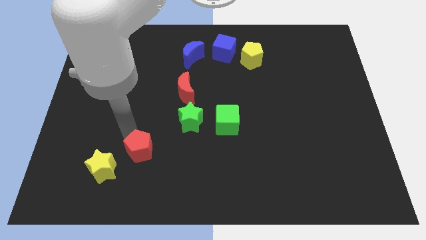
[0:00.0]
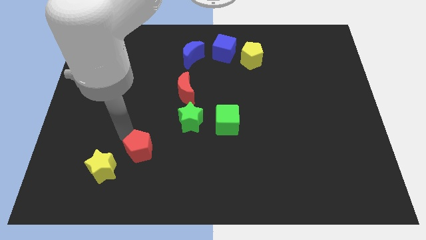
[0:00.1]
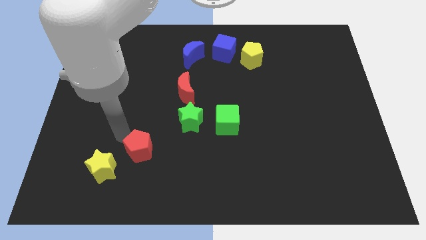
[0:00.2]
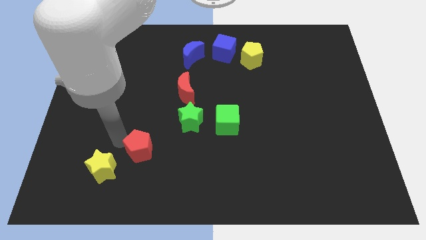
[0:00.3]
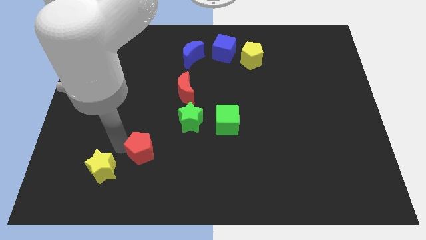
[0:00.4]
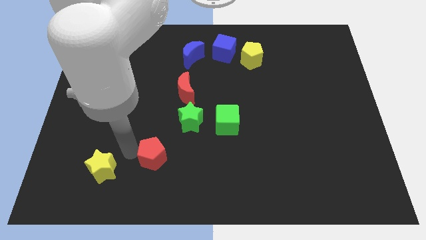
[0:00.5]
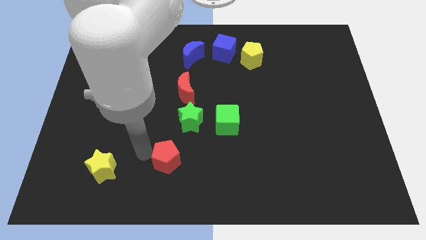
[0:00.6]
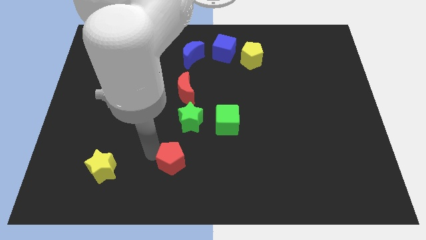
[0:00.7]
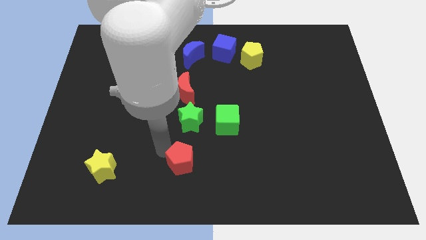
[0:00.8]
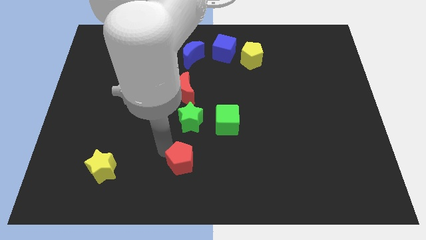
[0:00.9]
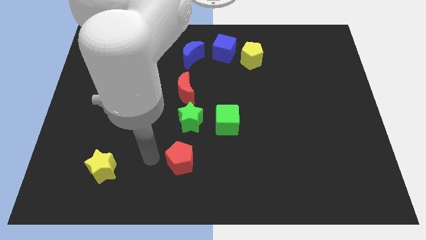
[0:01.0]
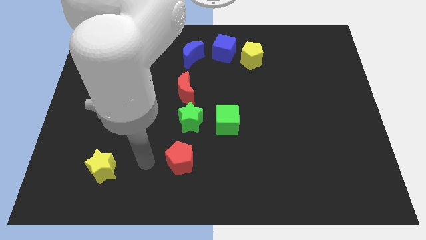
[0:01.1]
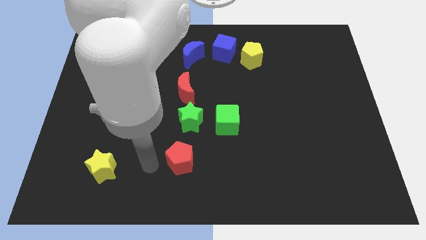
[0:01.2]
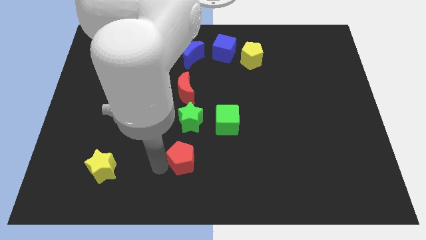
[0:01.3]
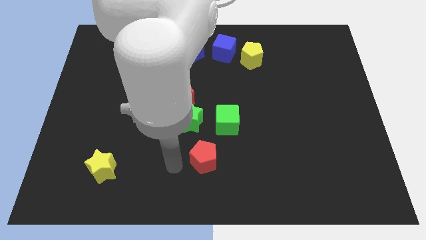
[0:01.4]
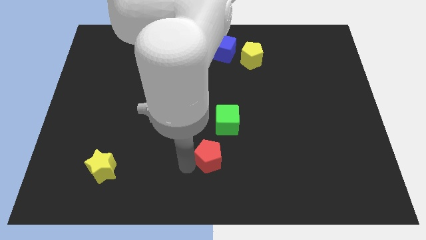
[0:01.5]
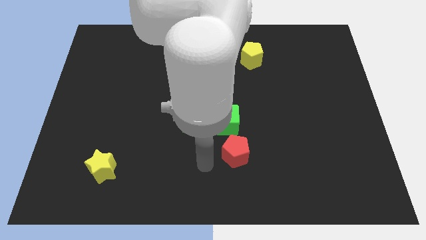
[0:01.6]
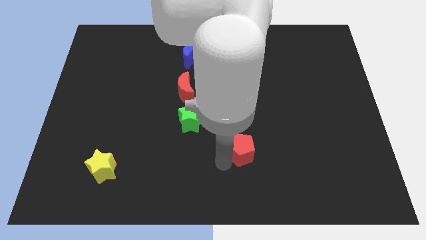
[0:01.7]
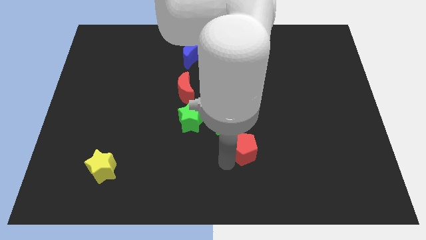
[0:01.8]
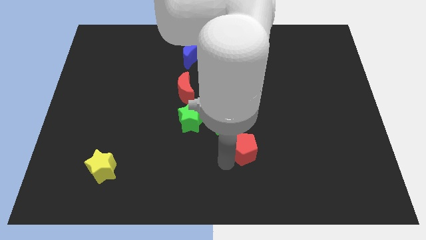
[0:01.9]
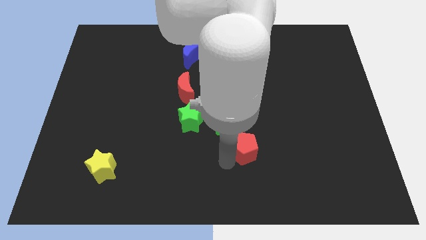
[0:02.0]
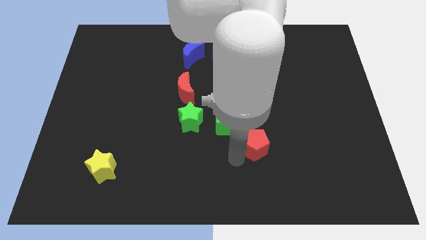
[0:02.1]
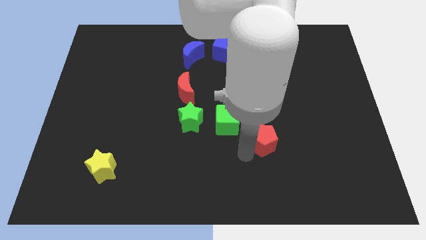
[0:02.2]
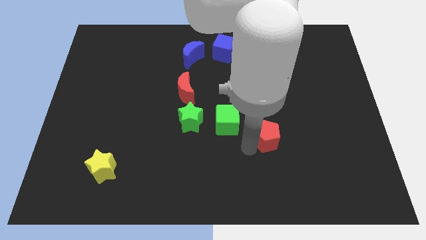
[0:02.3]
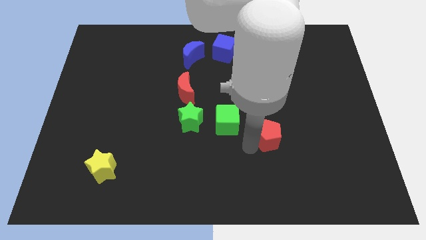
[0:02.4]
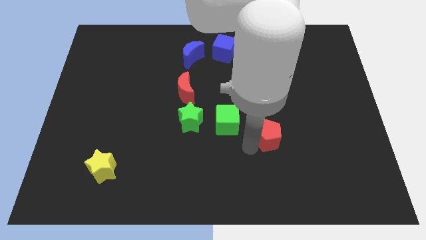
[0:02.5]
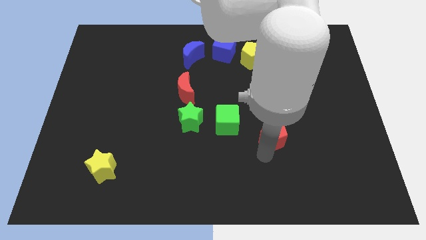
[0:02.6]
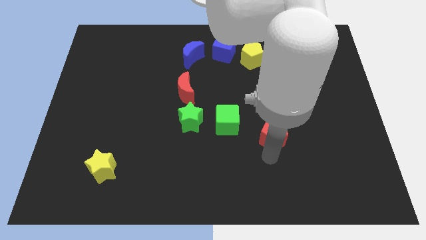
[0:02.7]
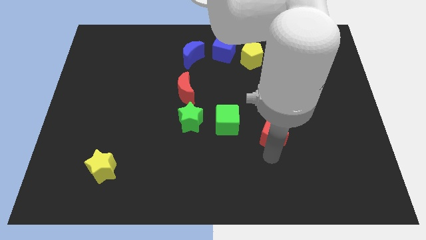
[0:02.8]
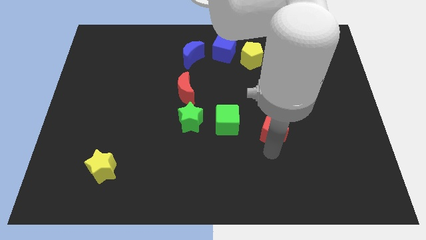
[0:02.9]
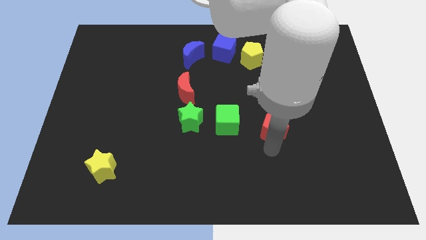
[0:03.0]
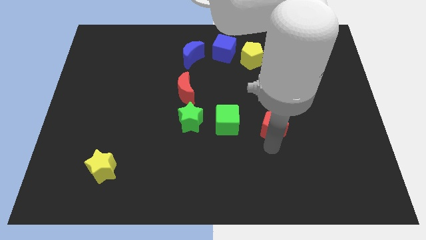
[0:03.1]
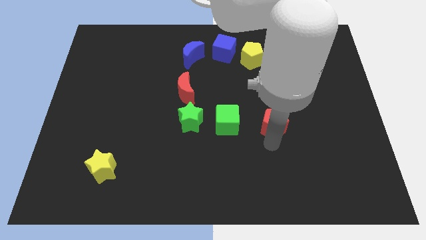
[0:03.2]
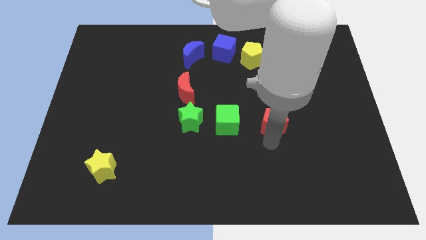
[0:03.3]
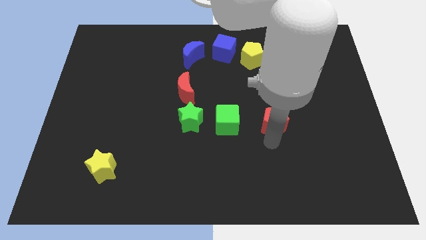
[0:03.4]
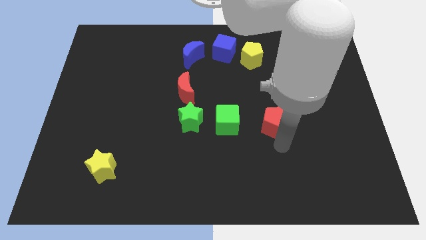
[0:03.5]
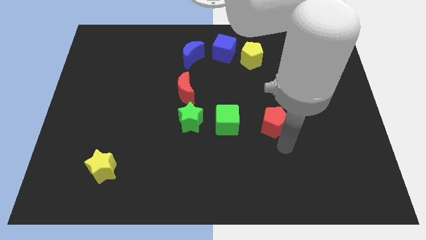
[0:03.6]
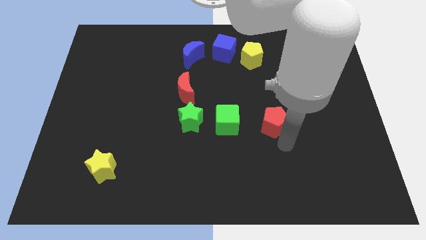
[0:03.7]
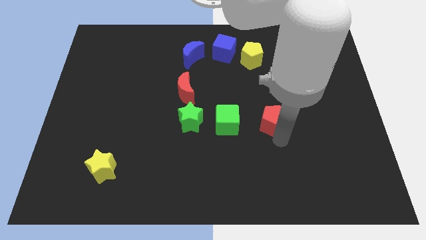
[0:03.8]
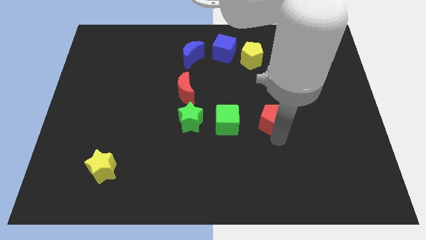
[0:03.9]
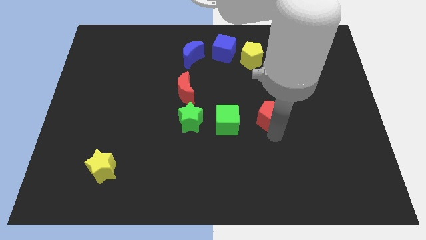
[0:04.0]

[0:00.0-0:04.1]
move the red pentagon to the right of the green cube

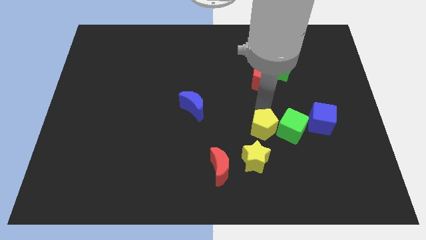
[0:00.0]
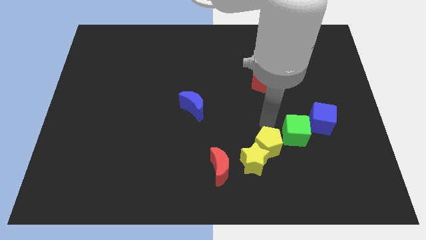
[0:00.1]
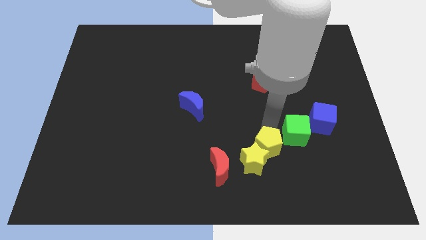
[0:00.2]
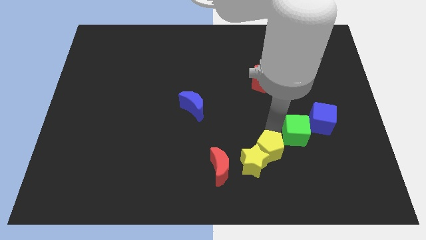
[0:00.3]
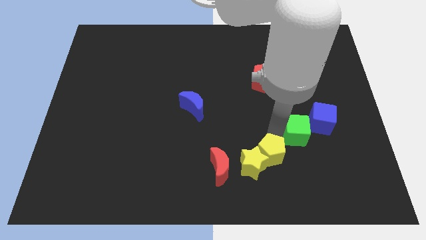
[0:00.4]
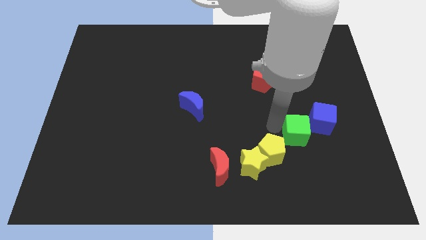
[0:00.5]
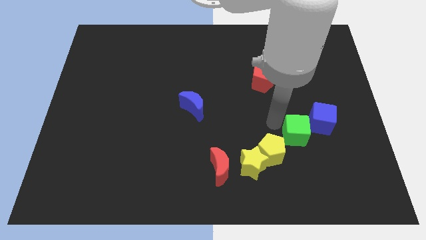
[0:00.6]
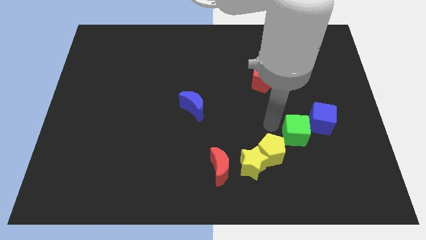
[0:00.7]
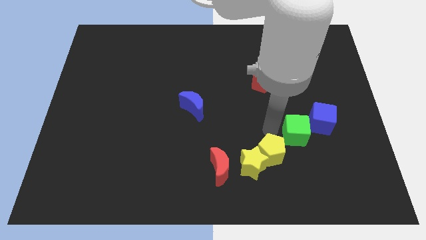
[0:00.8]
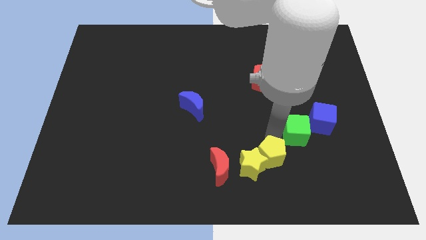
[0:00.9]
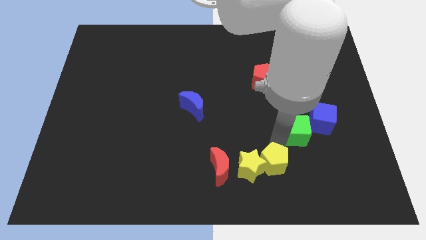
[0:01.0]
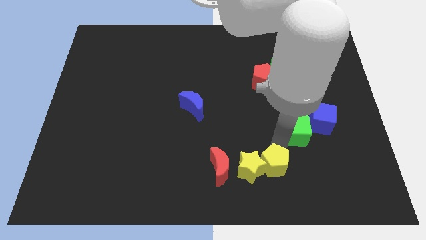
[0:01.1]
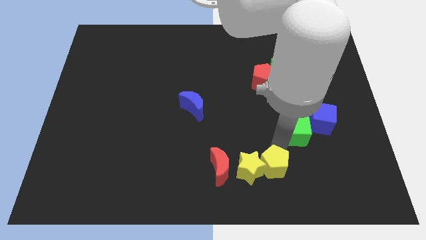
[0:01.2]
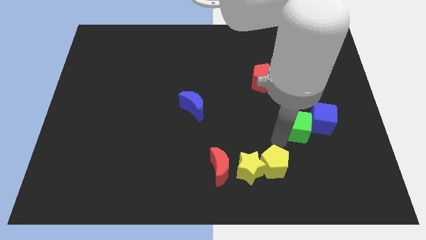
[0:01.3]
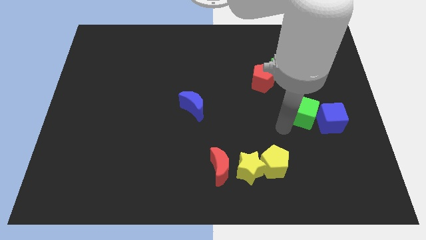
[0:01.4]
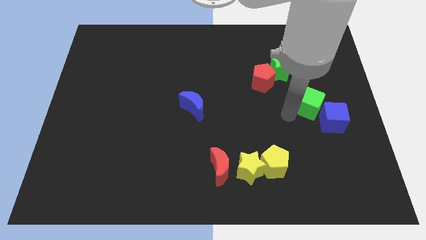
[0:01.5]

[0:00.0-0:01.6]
push yellow pentagon into the yellow star

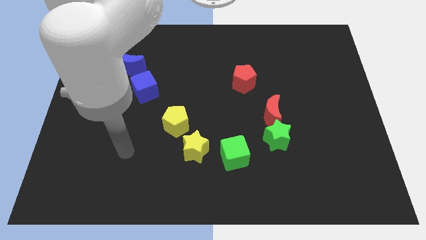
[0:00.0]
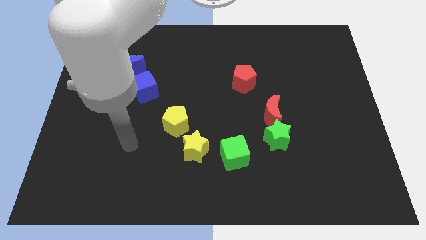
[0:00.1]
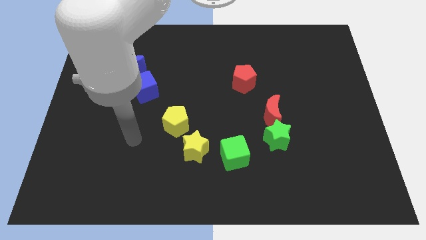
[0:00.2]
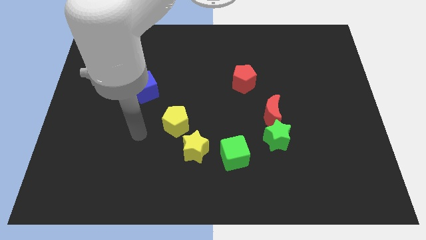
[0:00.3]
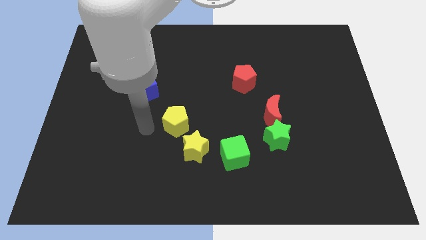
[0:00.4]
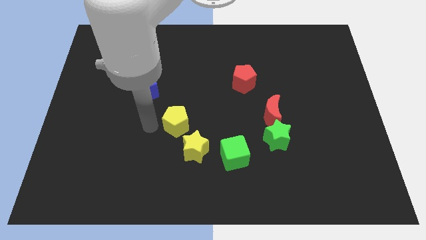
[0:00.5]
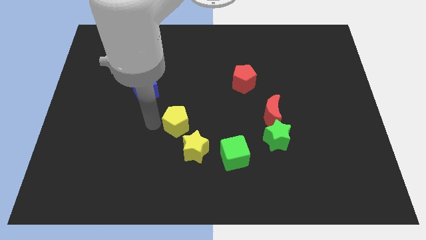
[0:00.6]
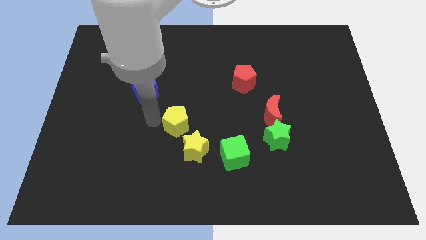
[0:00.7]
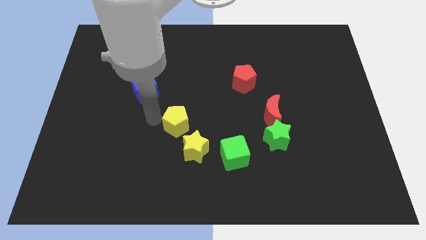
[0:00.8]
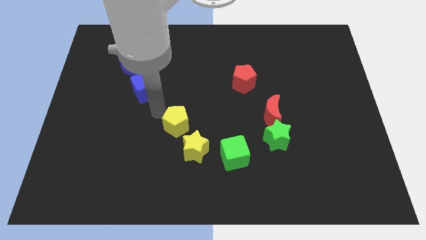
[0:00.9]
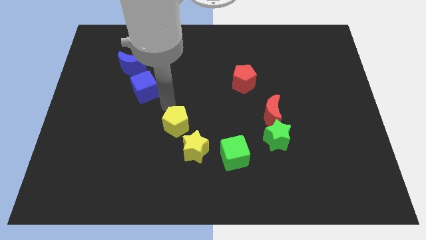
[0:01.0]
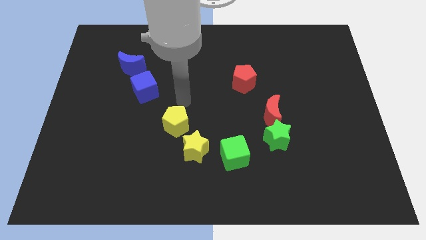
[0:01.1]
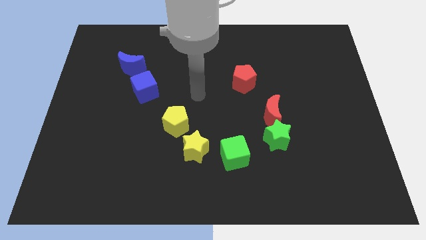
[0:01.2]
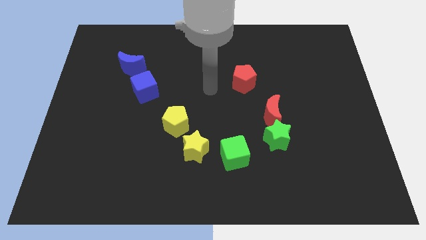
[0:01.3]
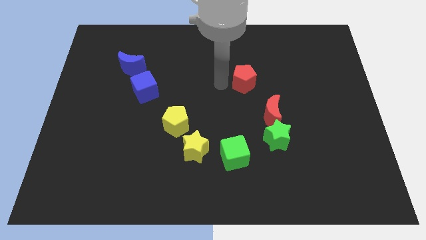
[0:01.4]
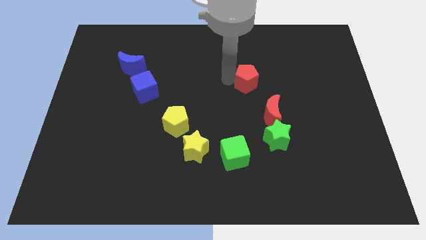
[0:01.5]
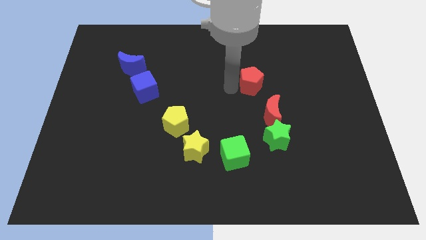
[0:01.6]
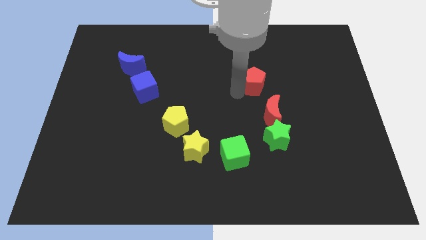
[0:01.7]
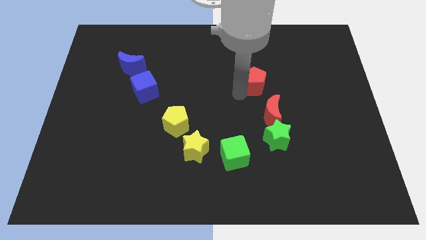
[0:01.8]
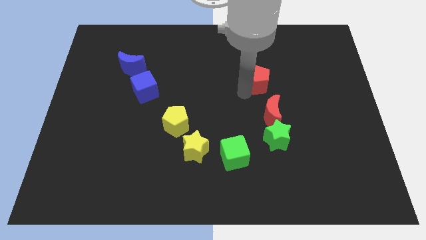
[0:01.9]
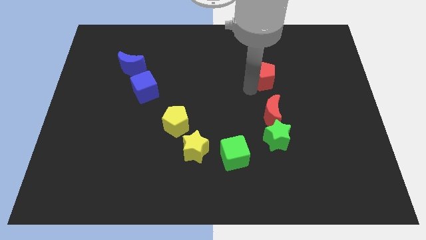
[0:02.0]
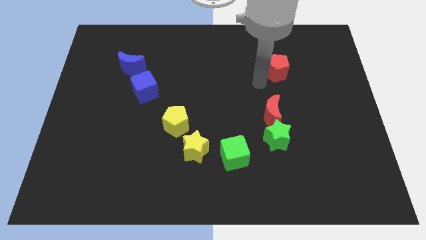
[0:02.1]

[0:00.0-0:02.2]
place the red pentagon at the top of the red moon

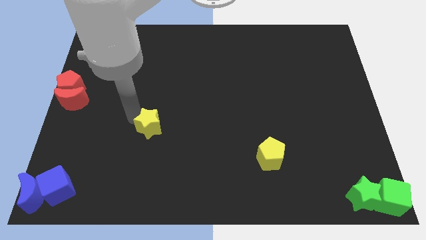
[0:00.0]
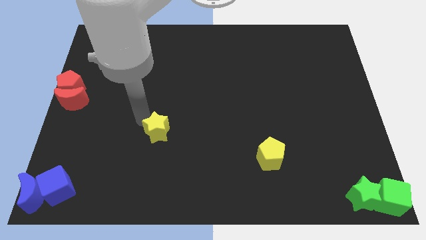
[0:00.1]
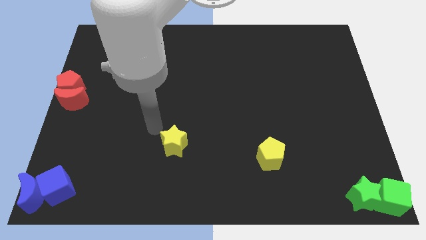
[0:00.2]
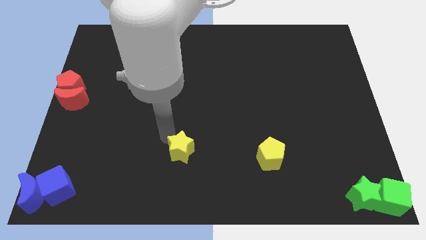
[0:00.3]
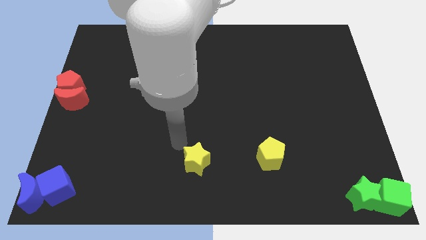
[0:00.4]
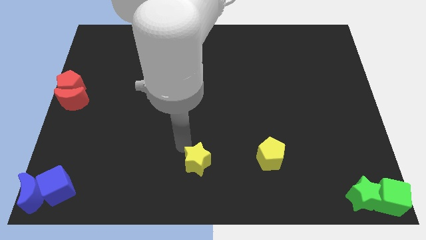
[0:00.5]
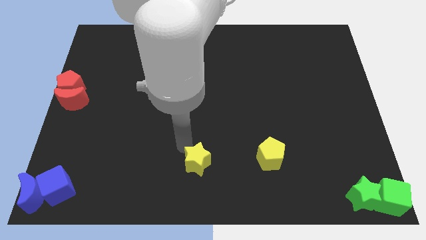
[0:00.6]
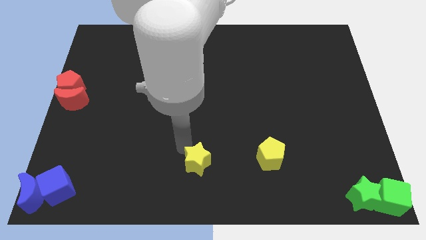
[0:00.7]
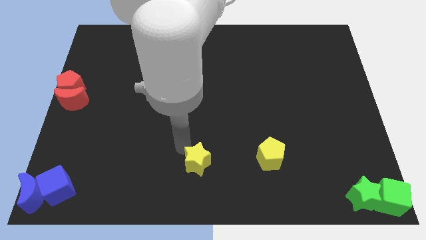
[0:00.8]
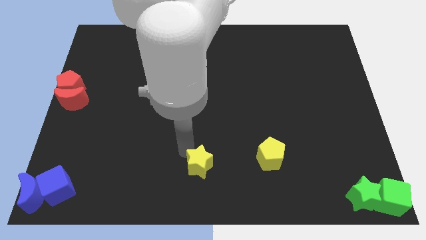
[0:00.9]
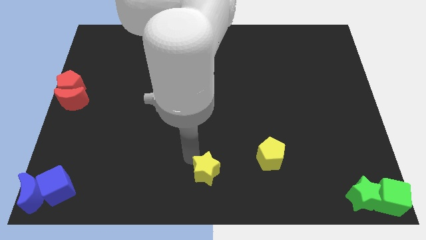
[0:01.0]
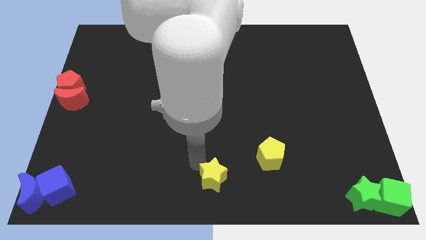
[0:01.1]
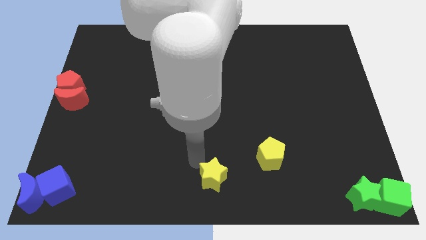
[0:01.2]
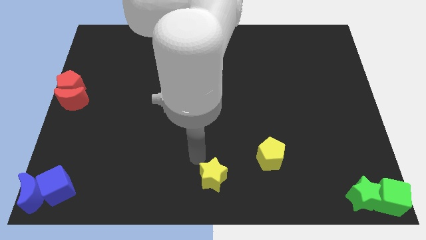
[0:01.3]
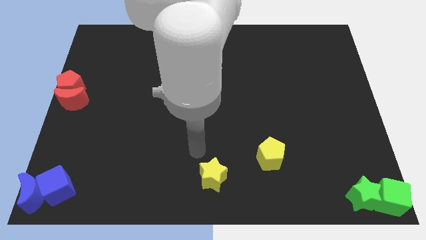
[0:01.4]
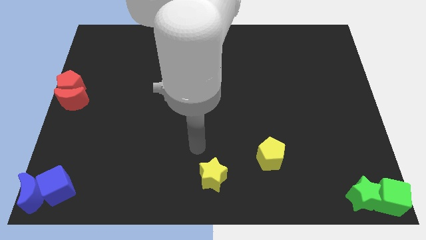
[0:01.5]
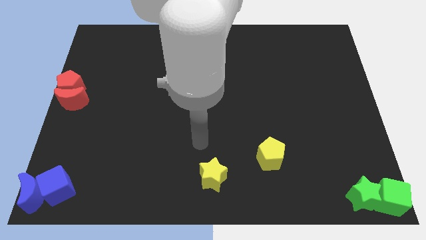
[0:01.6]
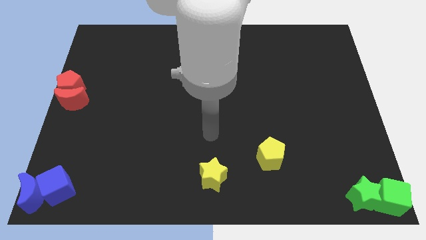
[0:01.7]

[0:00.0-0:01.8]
push the yellow star to the bottom center
